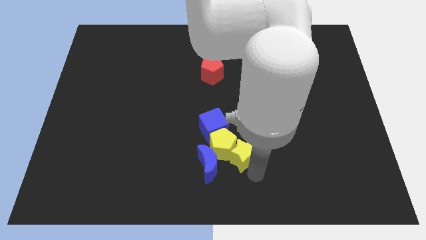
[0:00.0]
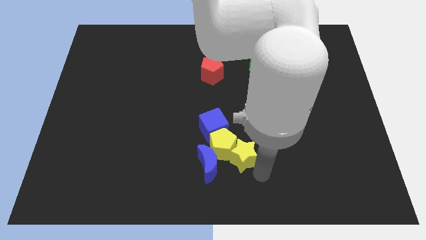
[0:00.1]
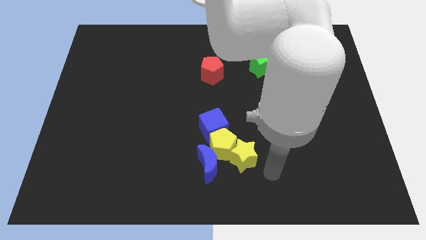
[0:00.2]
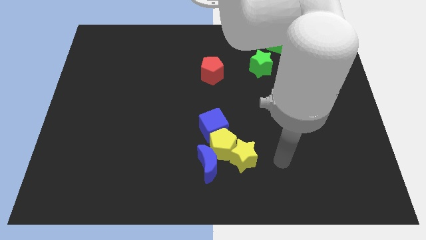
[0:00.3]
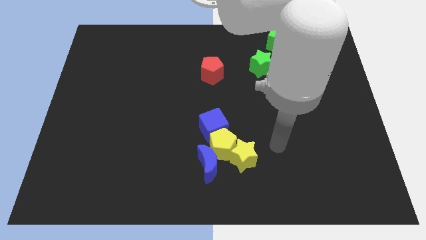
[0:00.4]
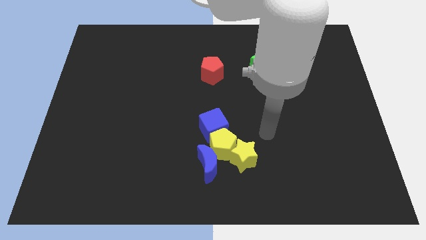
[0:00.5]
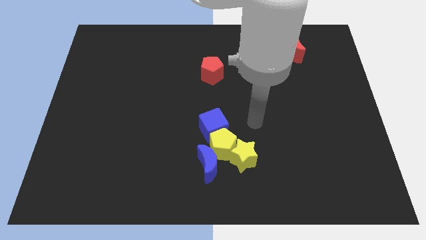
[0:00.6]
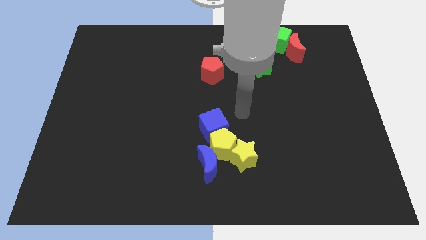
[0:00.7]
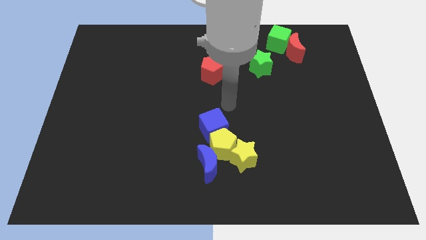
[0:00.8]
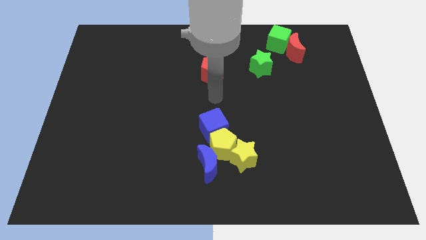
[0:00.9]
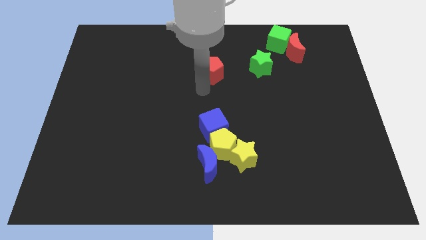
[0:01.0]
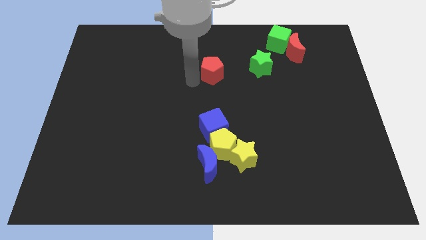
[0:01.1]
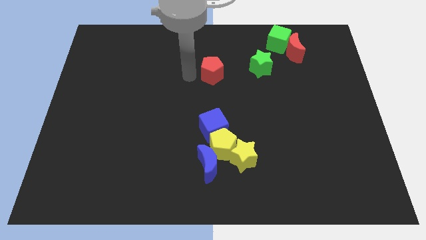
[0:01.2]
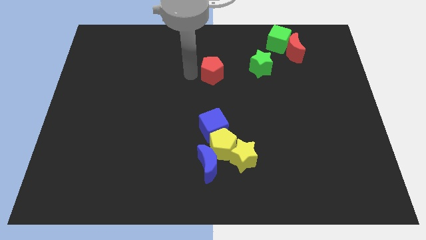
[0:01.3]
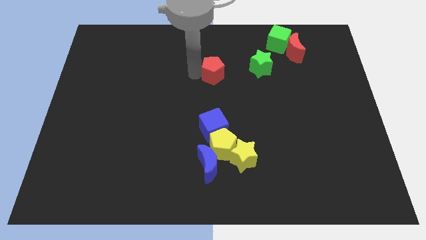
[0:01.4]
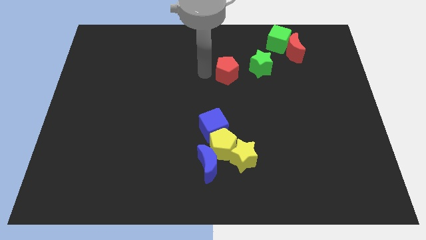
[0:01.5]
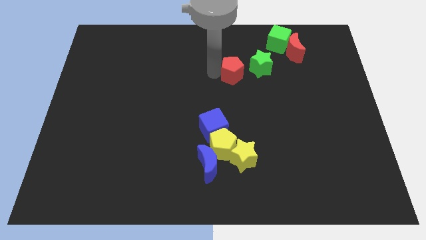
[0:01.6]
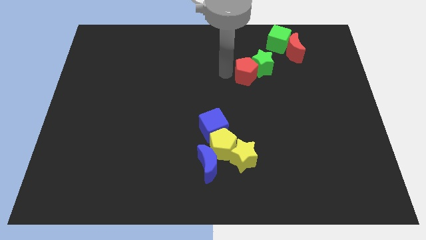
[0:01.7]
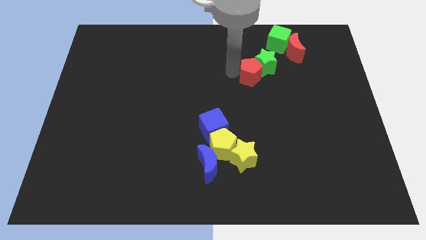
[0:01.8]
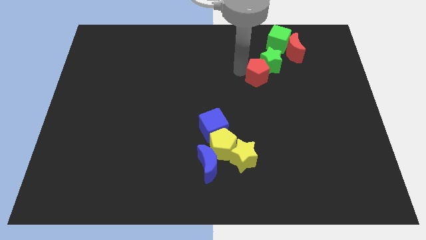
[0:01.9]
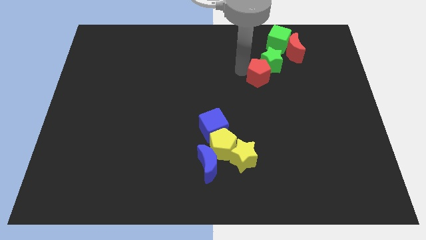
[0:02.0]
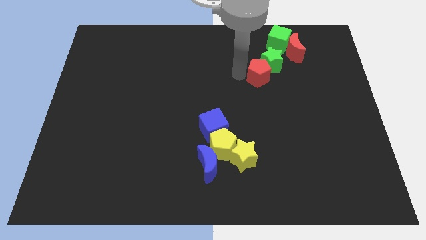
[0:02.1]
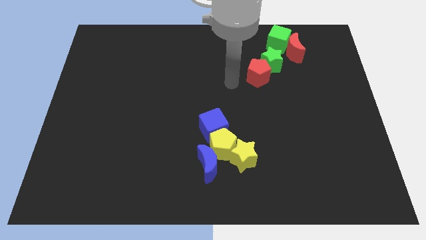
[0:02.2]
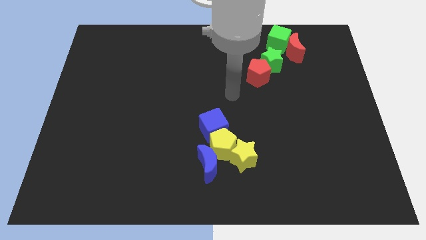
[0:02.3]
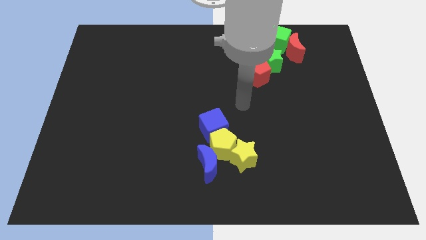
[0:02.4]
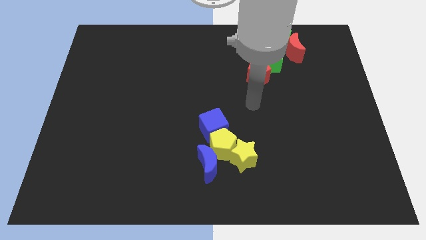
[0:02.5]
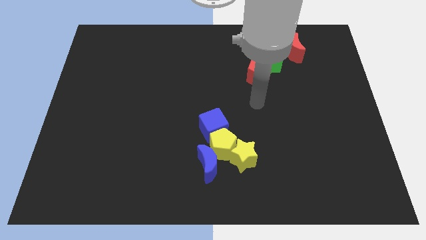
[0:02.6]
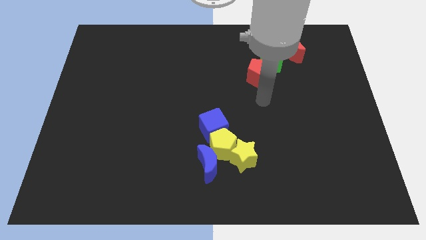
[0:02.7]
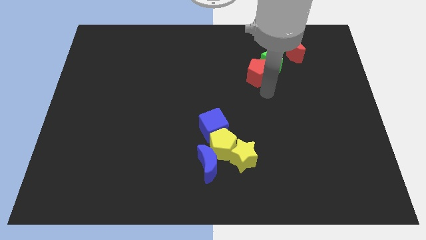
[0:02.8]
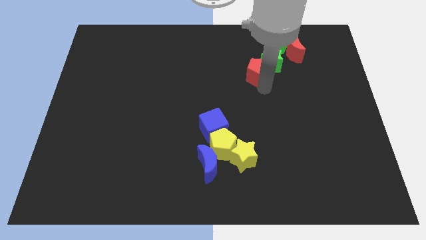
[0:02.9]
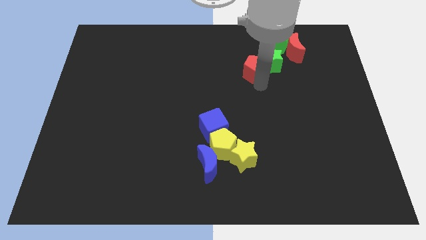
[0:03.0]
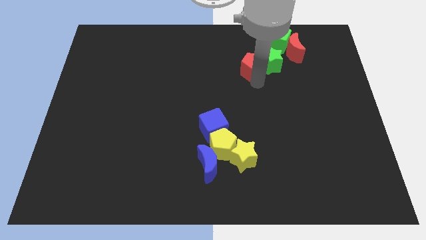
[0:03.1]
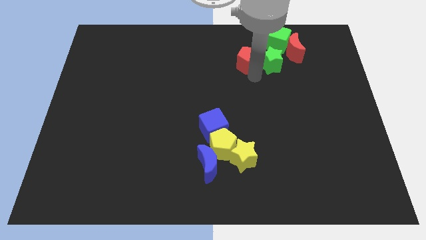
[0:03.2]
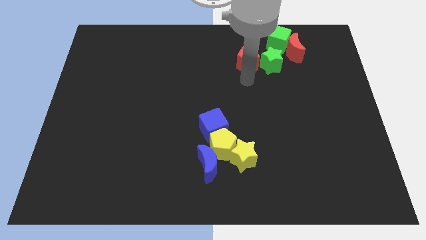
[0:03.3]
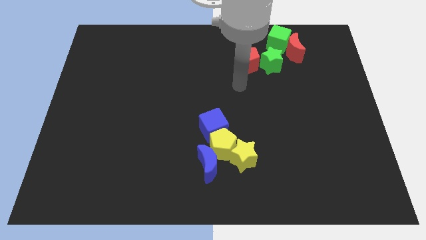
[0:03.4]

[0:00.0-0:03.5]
move the red pentagon to the left side of the green star

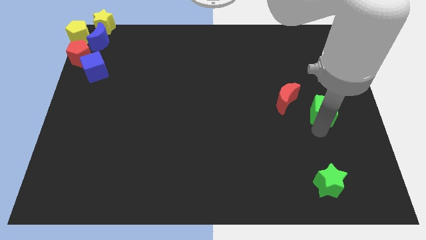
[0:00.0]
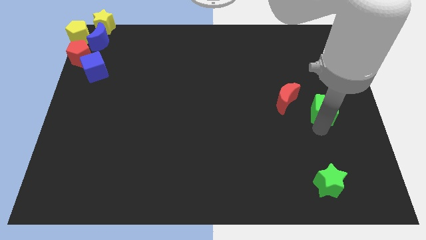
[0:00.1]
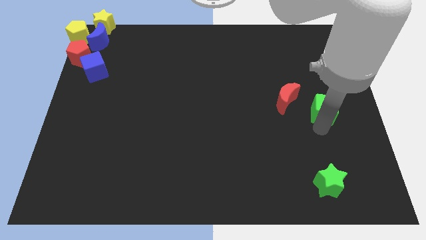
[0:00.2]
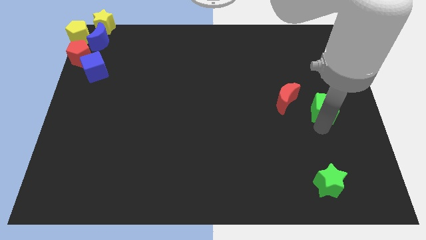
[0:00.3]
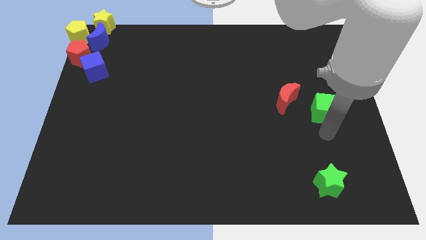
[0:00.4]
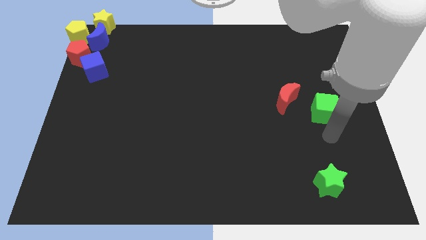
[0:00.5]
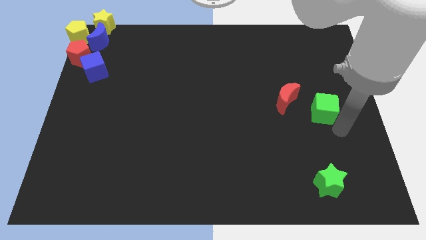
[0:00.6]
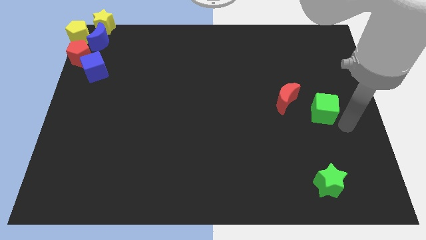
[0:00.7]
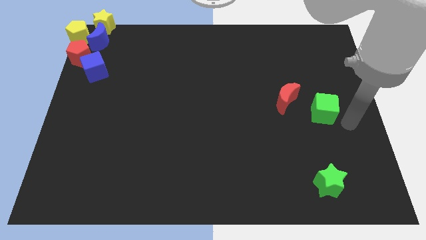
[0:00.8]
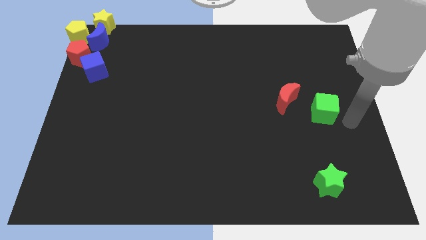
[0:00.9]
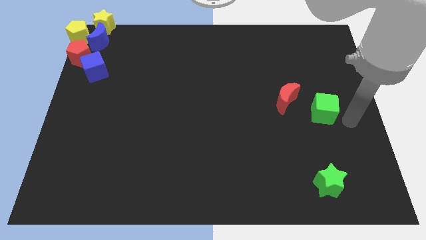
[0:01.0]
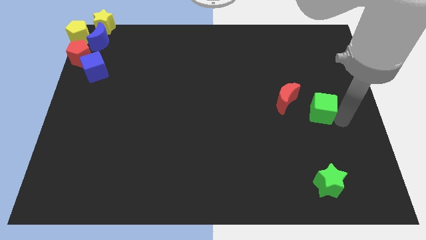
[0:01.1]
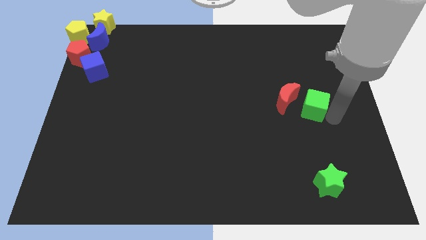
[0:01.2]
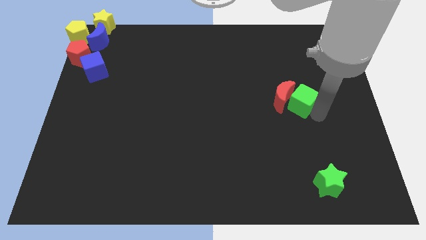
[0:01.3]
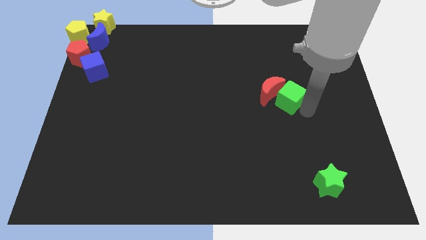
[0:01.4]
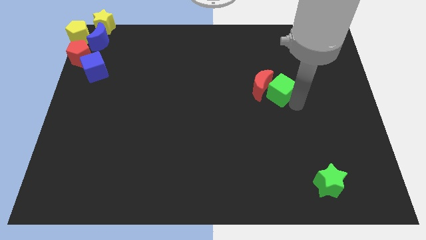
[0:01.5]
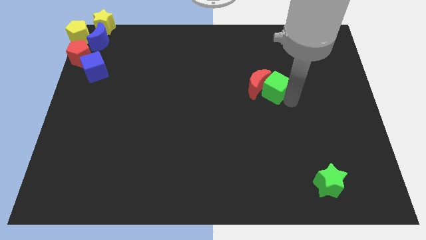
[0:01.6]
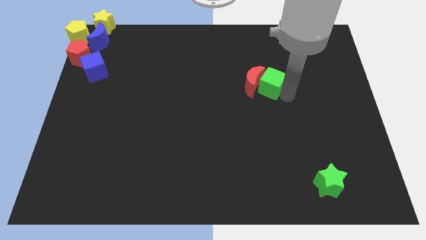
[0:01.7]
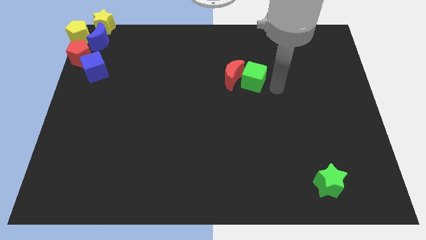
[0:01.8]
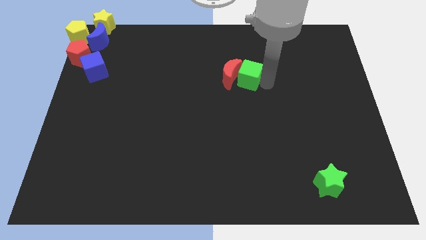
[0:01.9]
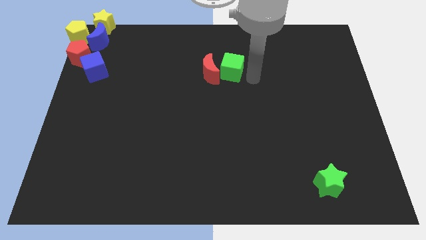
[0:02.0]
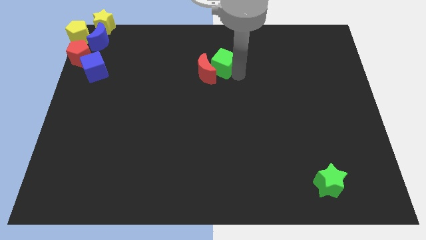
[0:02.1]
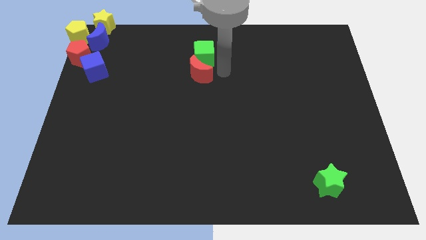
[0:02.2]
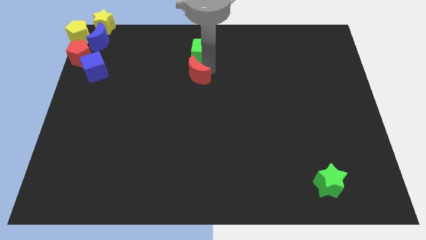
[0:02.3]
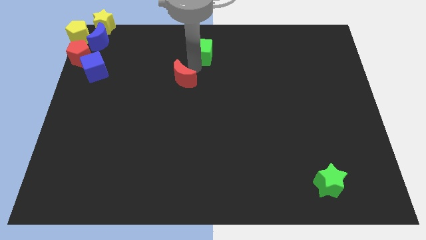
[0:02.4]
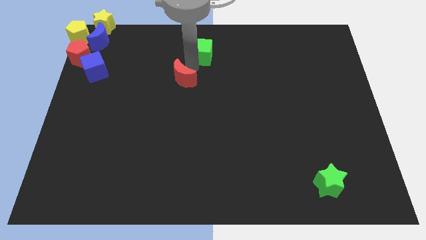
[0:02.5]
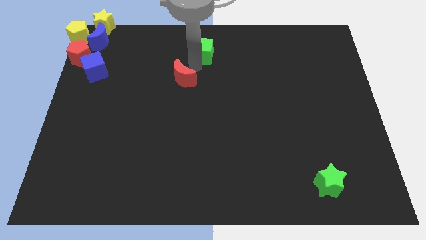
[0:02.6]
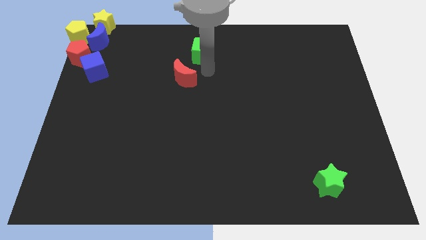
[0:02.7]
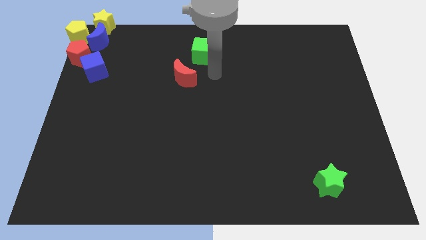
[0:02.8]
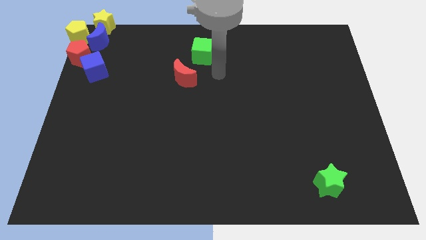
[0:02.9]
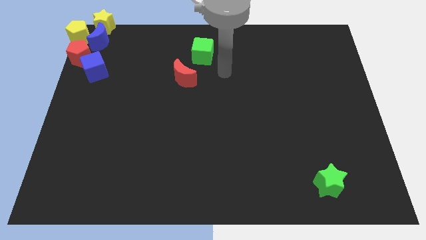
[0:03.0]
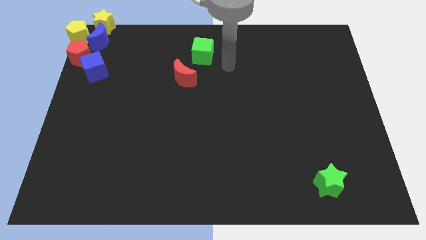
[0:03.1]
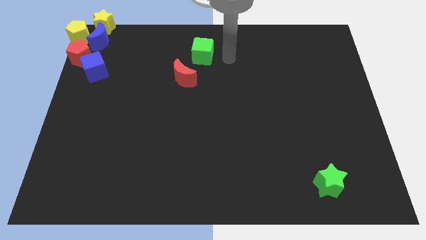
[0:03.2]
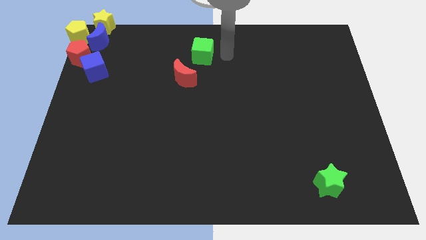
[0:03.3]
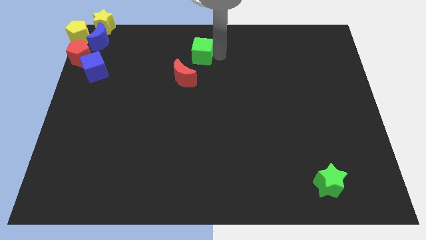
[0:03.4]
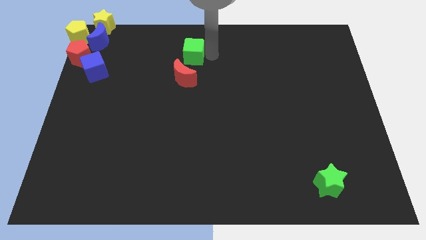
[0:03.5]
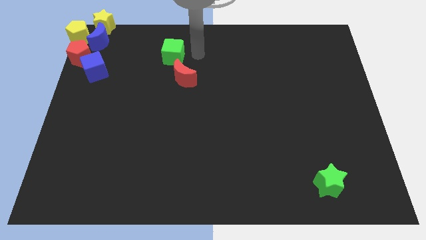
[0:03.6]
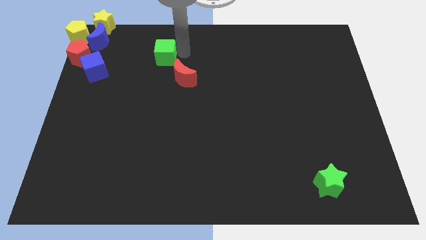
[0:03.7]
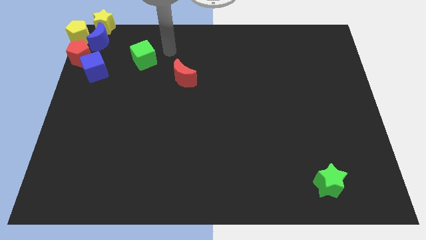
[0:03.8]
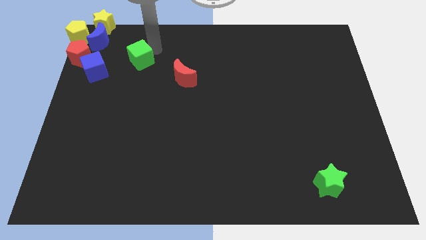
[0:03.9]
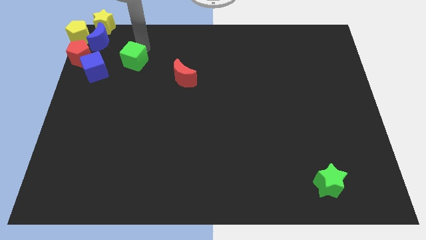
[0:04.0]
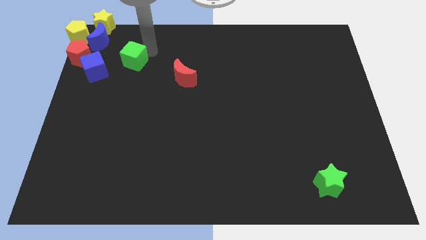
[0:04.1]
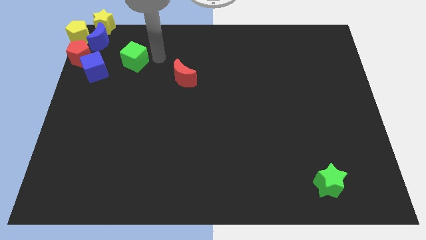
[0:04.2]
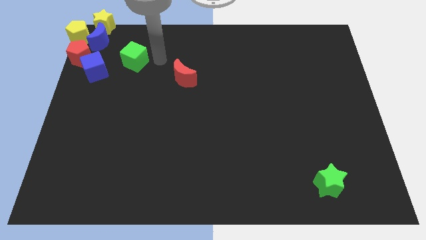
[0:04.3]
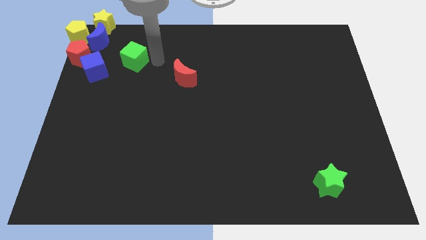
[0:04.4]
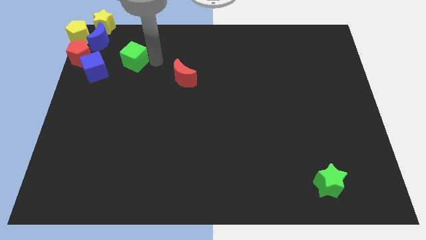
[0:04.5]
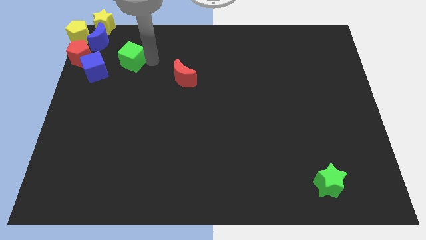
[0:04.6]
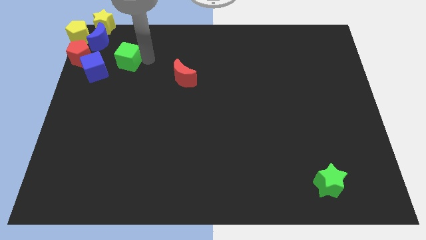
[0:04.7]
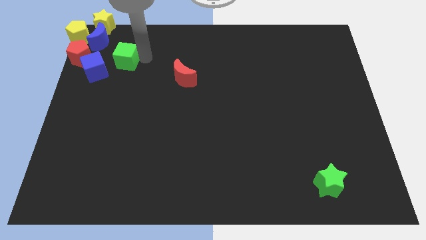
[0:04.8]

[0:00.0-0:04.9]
move the green cube to the right of the blue cube

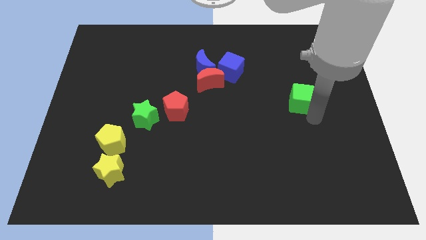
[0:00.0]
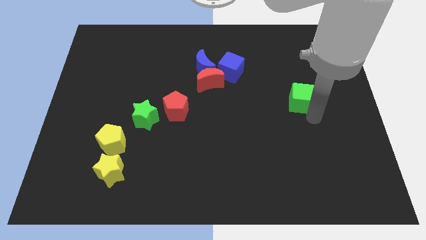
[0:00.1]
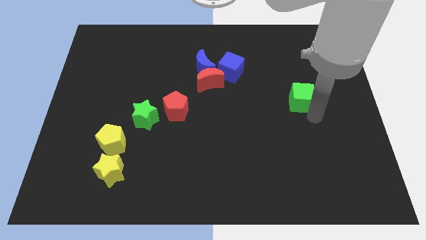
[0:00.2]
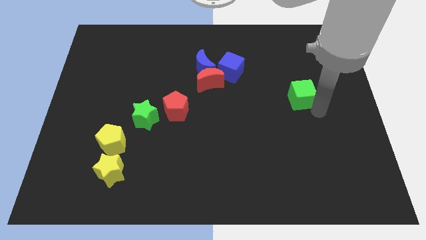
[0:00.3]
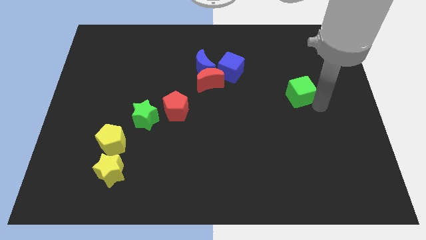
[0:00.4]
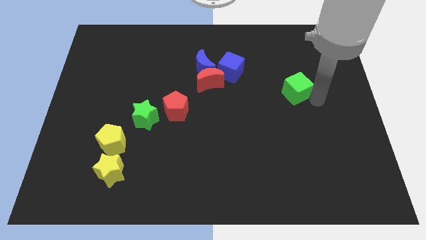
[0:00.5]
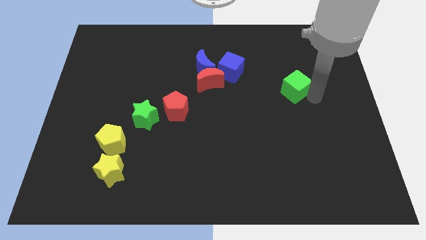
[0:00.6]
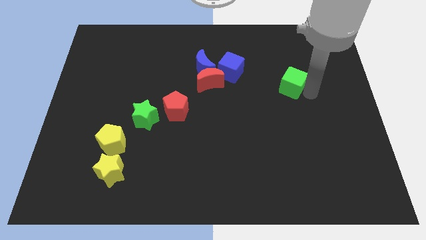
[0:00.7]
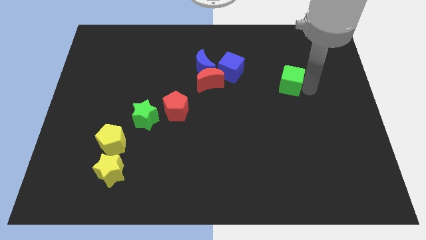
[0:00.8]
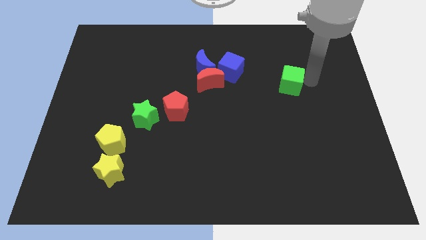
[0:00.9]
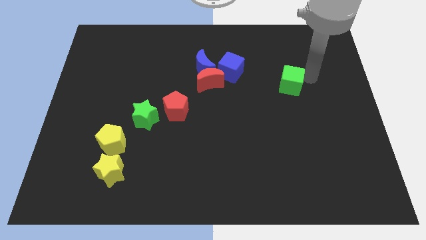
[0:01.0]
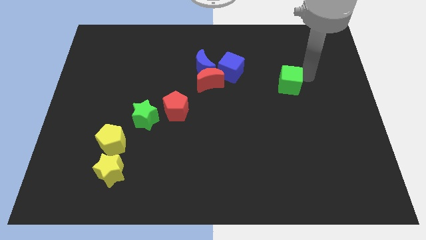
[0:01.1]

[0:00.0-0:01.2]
move the green cube slightly upwards
